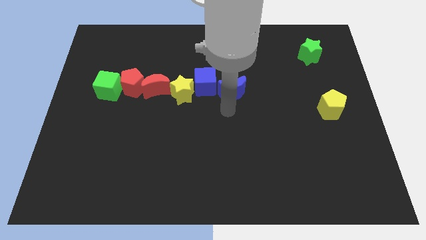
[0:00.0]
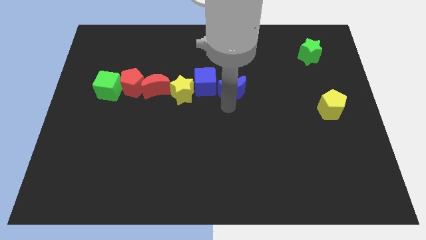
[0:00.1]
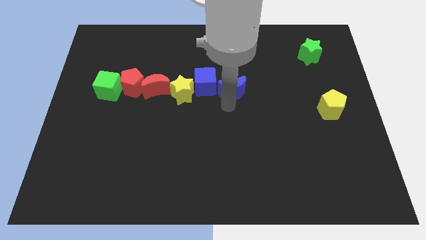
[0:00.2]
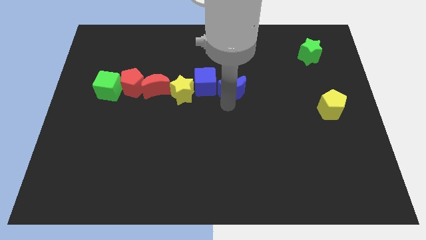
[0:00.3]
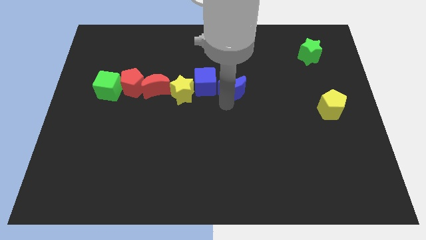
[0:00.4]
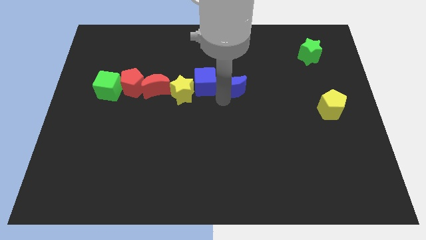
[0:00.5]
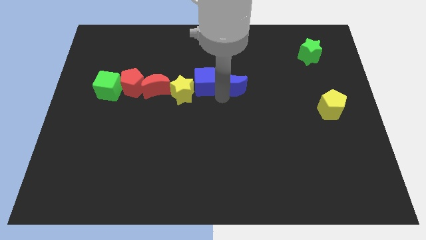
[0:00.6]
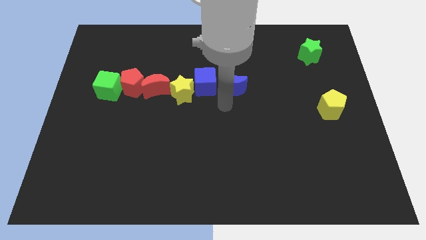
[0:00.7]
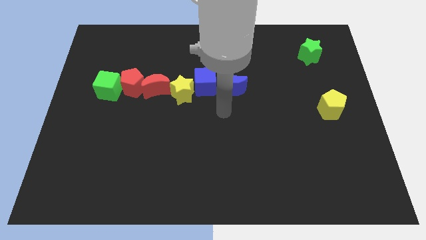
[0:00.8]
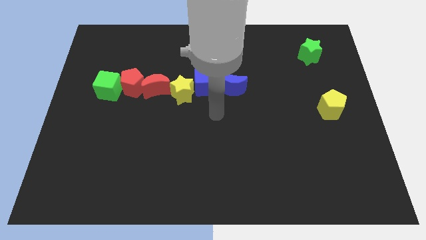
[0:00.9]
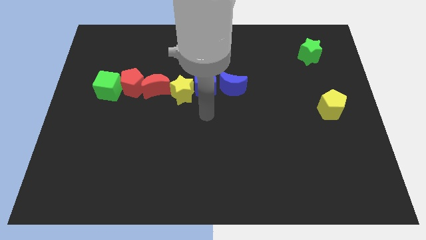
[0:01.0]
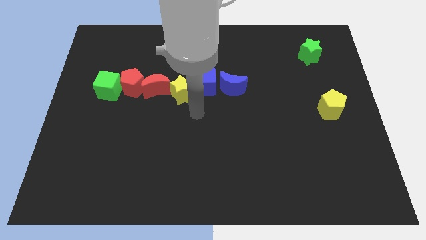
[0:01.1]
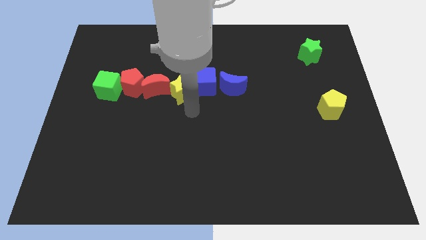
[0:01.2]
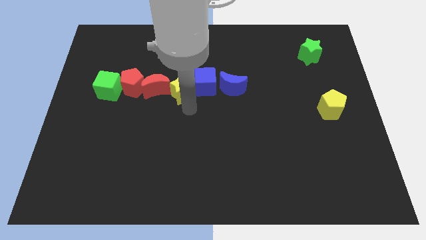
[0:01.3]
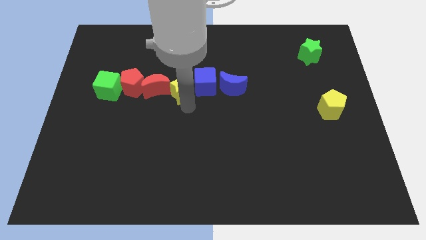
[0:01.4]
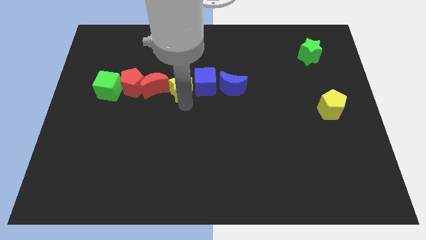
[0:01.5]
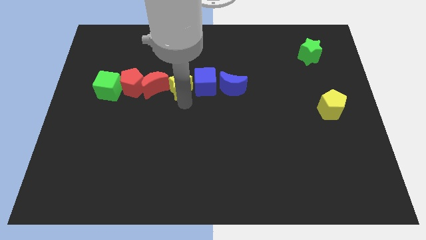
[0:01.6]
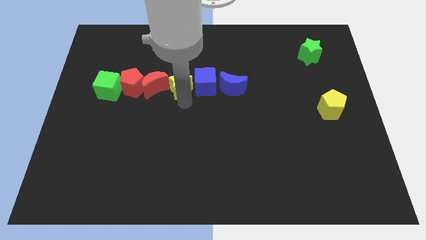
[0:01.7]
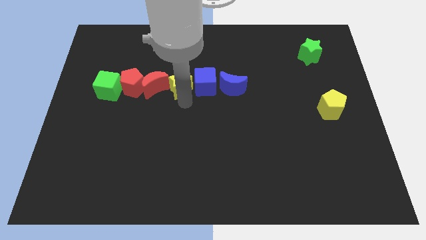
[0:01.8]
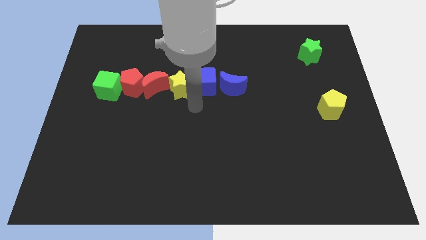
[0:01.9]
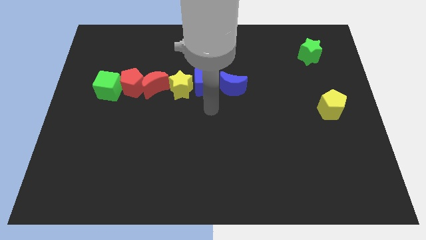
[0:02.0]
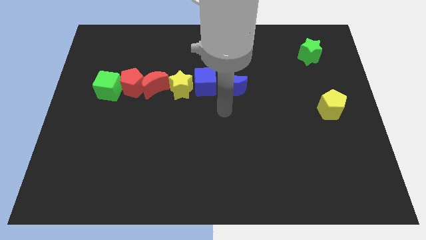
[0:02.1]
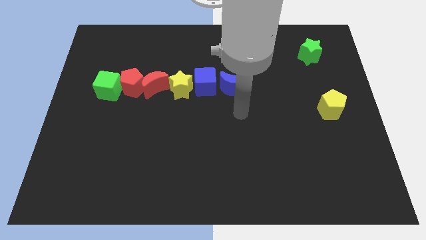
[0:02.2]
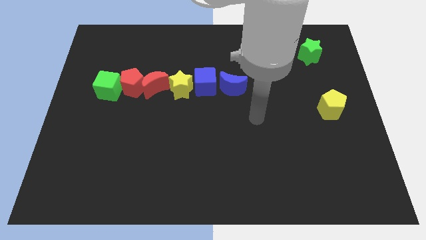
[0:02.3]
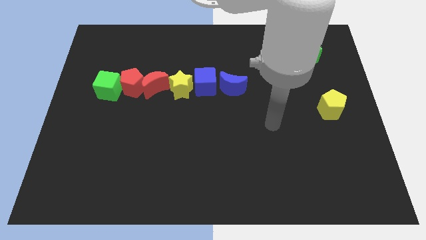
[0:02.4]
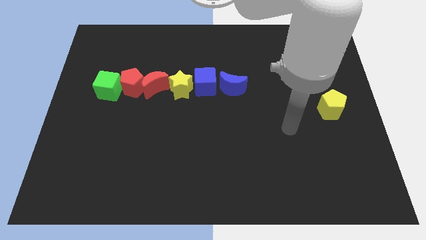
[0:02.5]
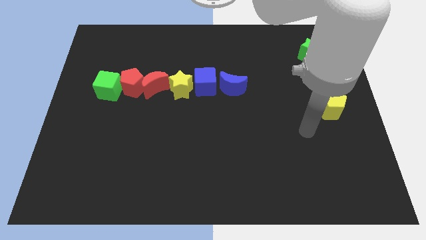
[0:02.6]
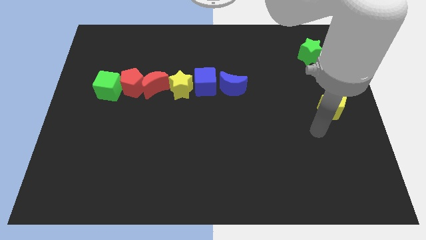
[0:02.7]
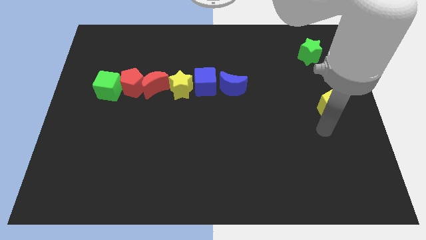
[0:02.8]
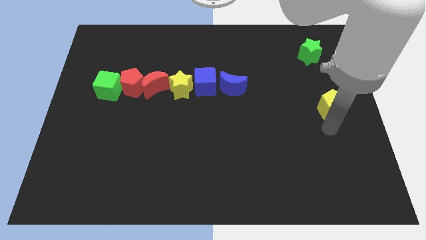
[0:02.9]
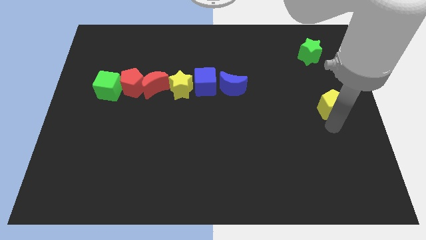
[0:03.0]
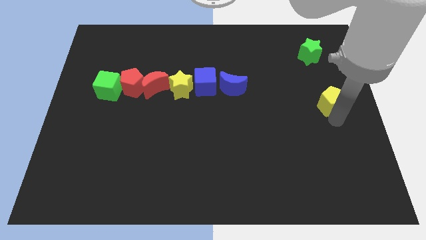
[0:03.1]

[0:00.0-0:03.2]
touch the bottom of blue moon yellow star and yellow pentagon

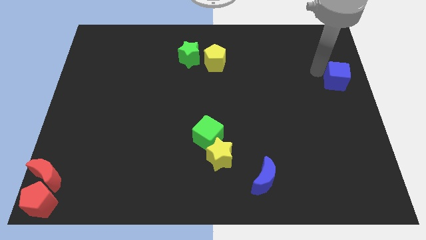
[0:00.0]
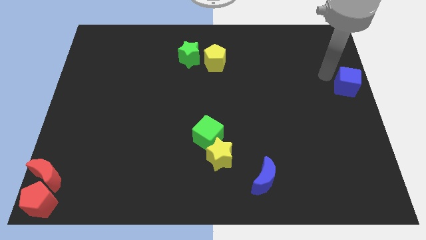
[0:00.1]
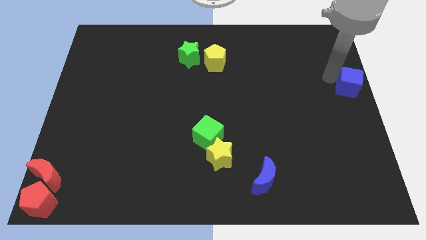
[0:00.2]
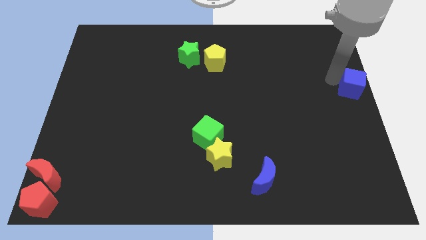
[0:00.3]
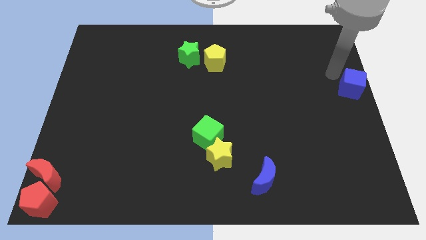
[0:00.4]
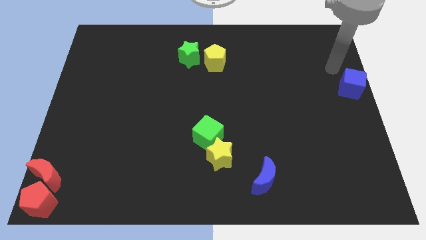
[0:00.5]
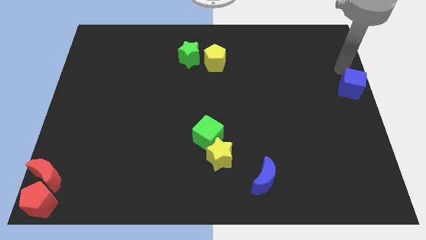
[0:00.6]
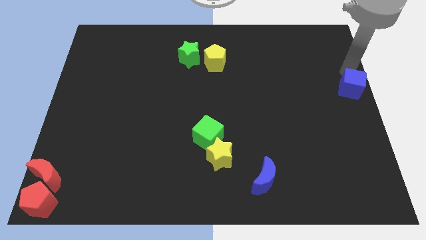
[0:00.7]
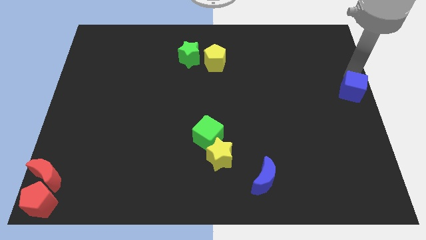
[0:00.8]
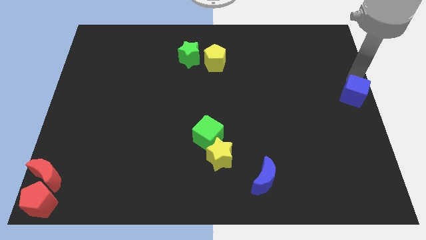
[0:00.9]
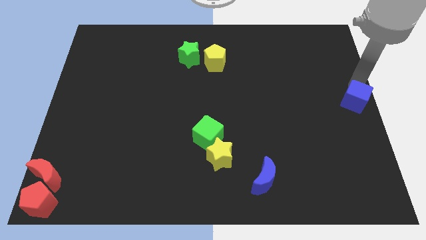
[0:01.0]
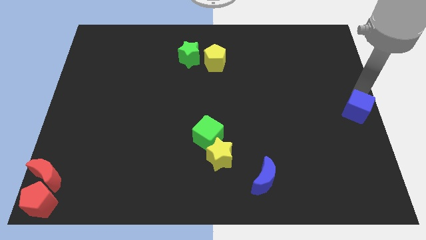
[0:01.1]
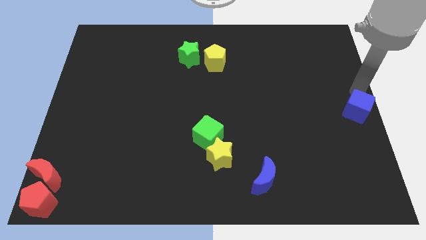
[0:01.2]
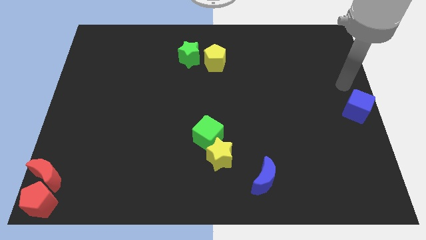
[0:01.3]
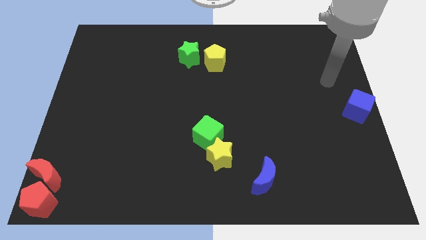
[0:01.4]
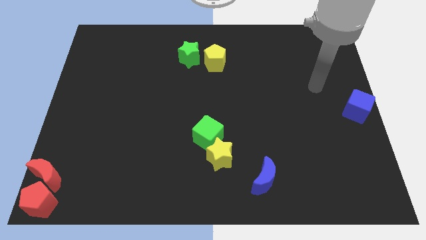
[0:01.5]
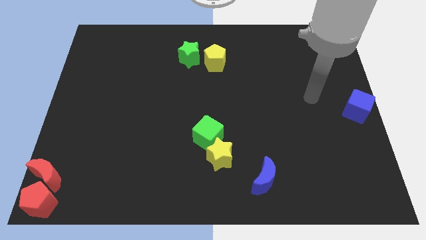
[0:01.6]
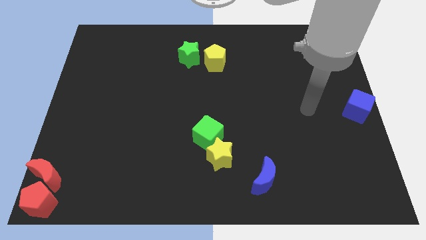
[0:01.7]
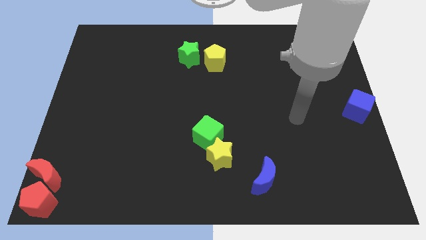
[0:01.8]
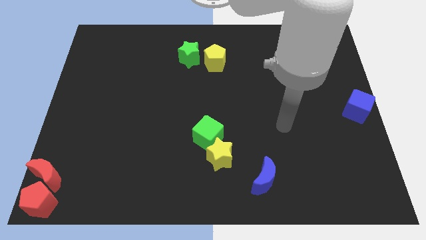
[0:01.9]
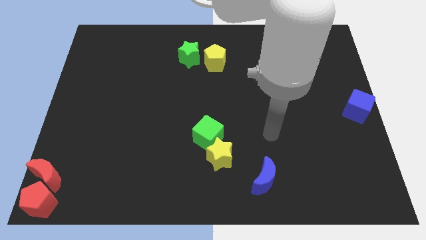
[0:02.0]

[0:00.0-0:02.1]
place the blue cube towards the center right

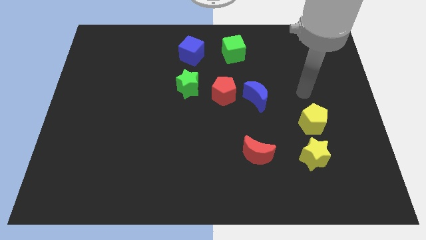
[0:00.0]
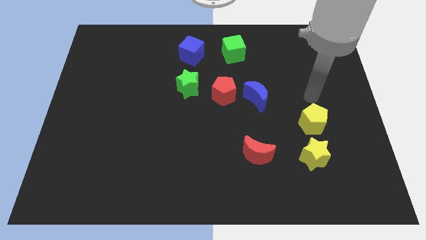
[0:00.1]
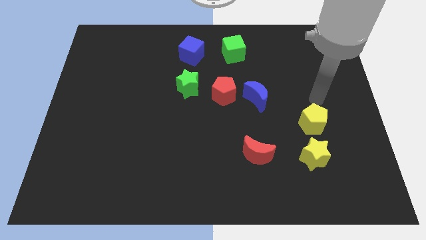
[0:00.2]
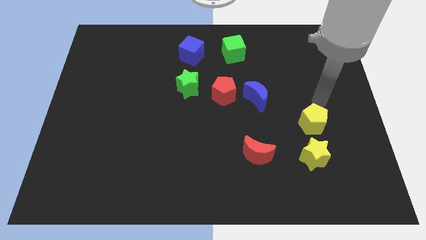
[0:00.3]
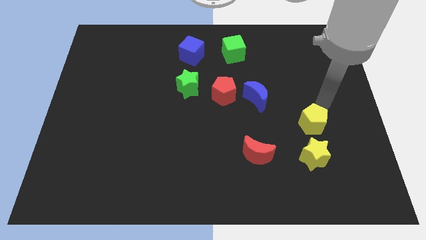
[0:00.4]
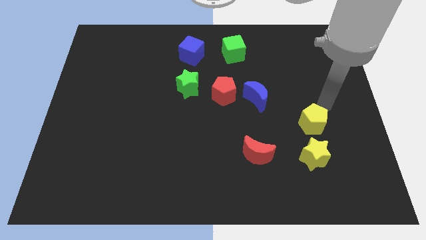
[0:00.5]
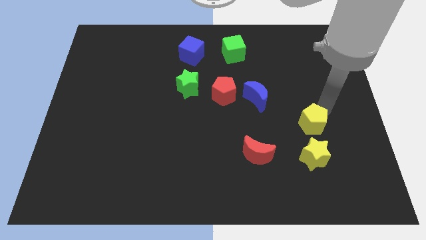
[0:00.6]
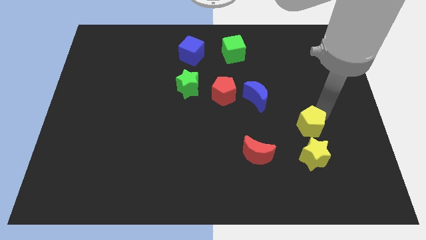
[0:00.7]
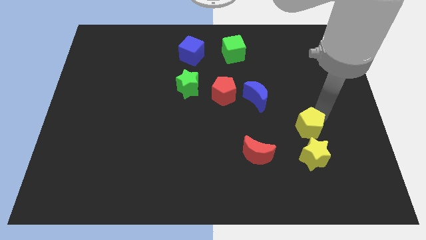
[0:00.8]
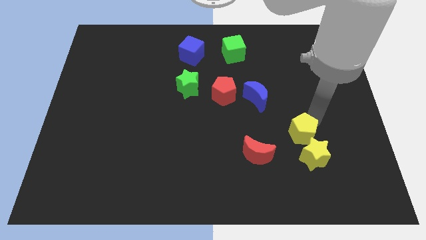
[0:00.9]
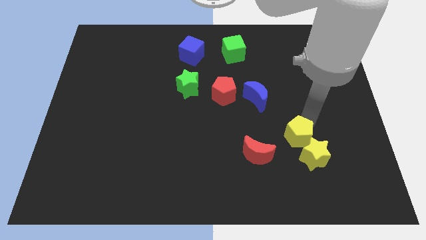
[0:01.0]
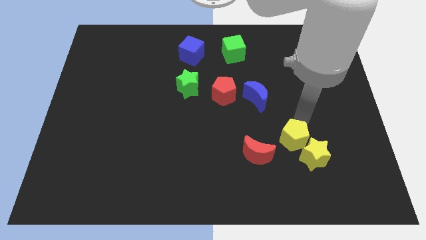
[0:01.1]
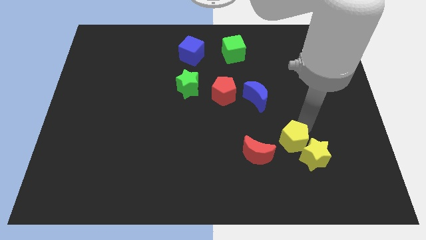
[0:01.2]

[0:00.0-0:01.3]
move the yellow pentagon to the top left of the yellow star

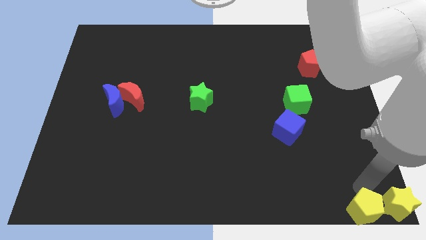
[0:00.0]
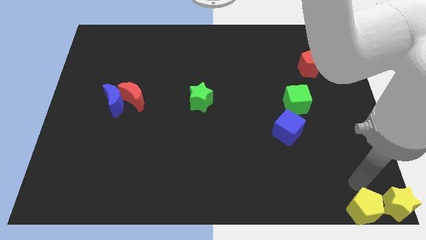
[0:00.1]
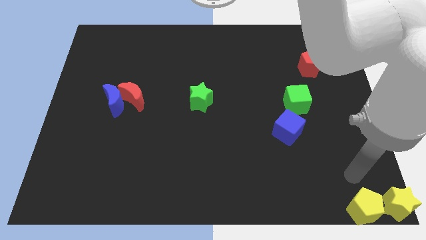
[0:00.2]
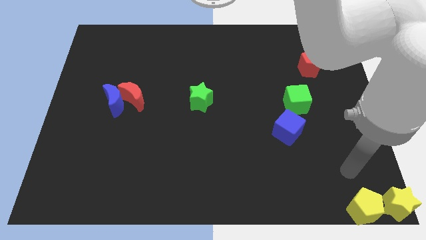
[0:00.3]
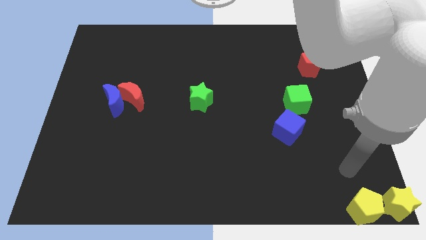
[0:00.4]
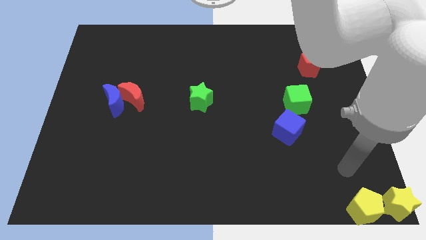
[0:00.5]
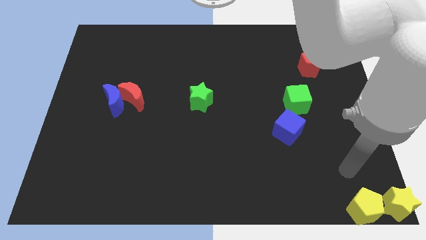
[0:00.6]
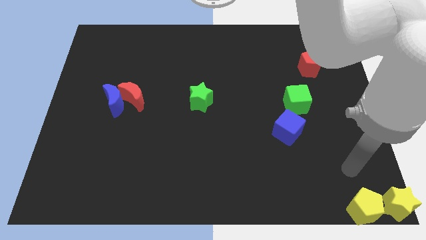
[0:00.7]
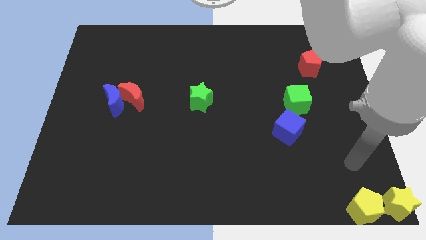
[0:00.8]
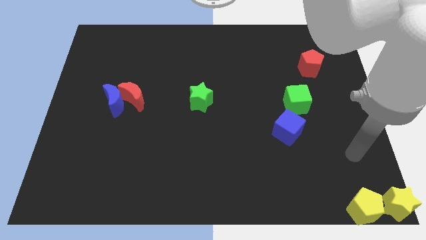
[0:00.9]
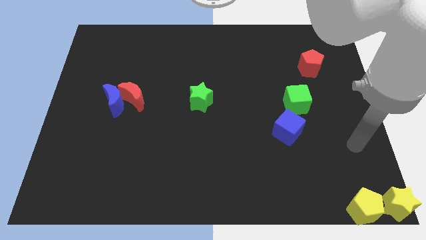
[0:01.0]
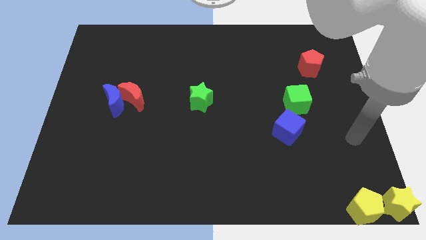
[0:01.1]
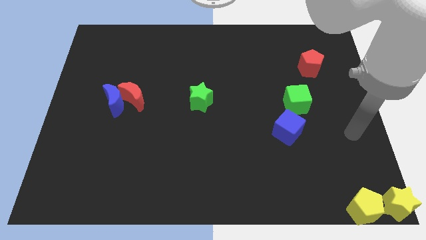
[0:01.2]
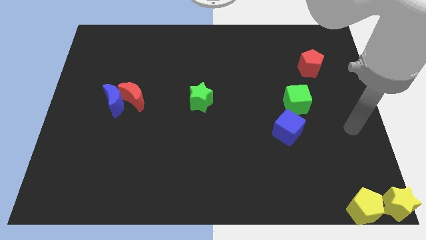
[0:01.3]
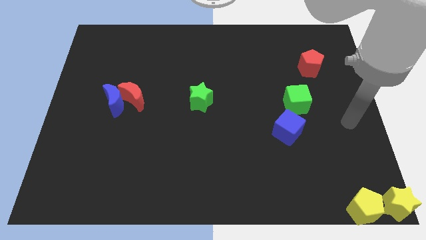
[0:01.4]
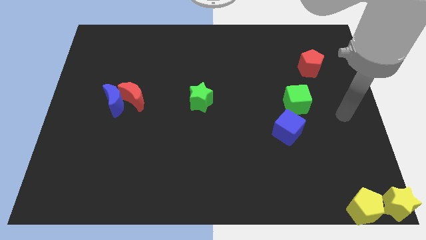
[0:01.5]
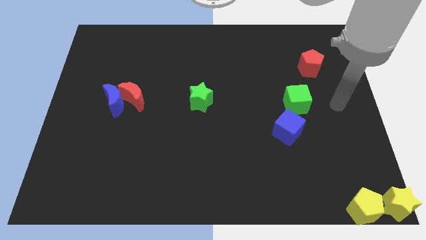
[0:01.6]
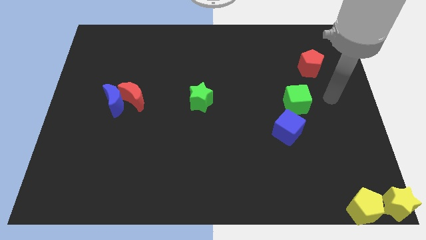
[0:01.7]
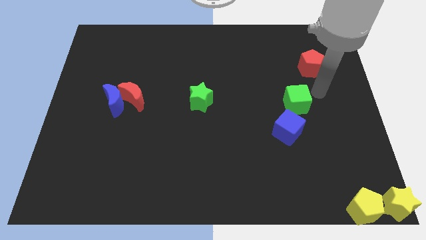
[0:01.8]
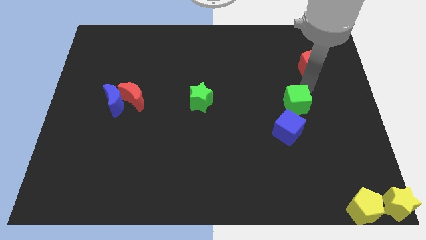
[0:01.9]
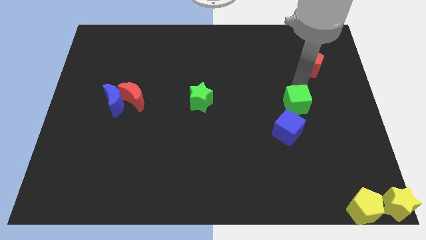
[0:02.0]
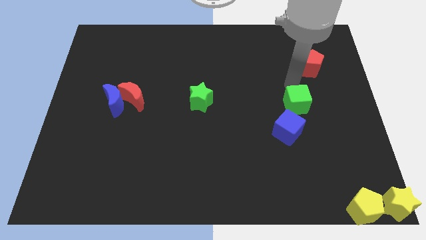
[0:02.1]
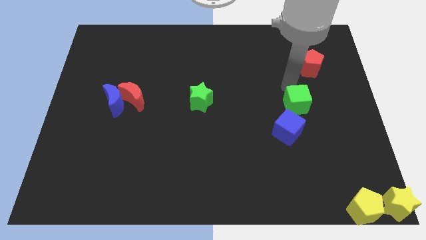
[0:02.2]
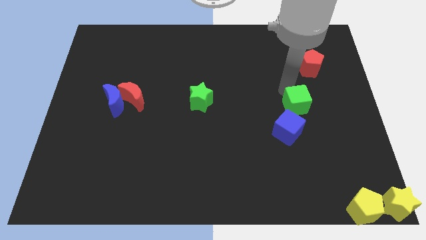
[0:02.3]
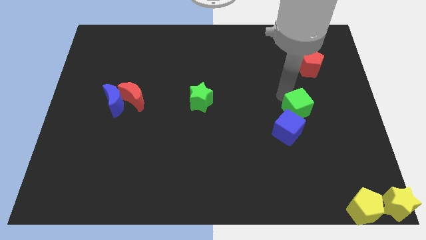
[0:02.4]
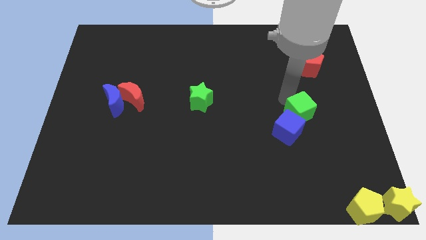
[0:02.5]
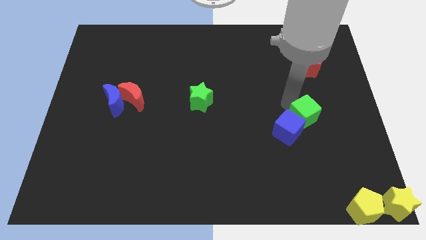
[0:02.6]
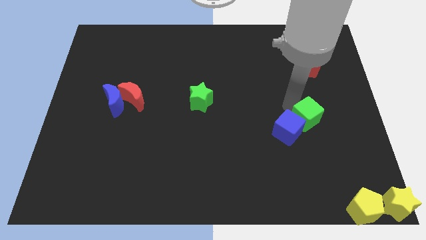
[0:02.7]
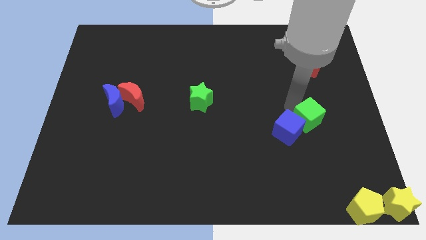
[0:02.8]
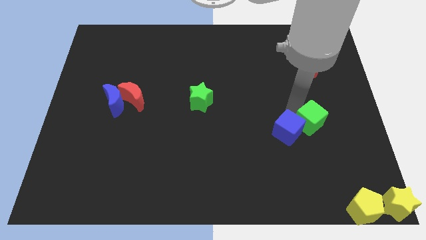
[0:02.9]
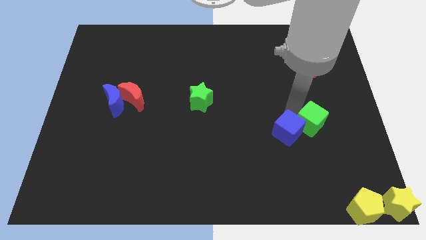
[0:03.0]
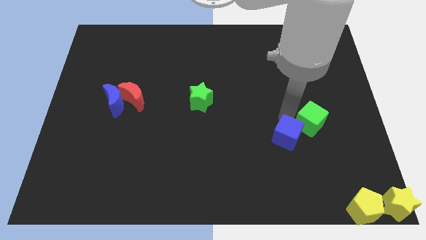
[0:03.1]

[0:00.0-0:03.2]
move the green cube slightly to the bottom right of the board
